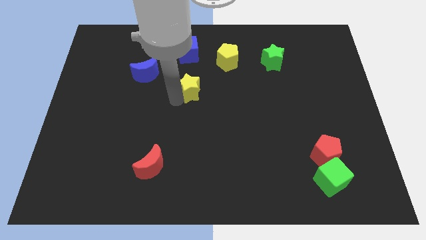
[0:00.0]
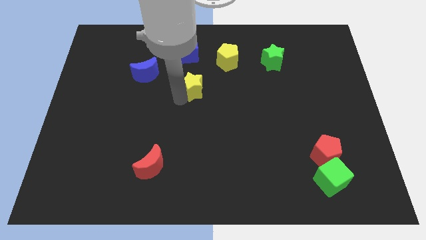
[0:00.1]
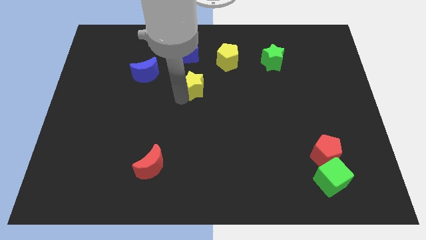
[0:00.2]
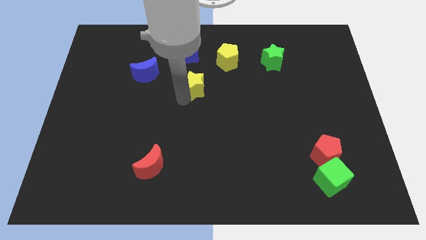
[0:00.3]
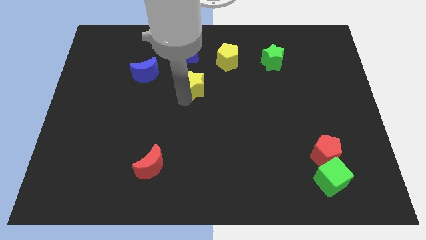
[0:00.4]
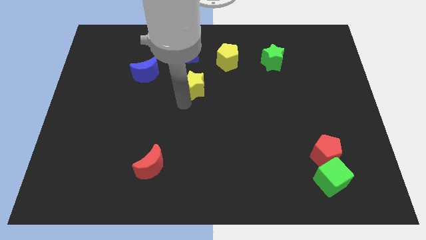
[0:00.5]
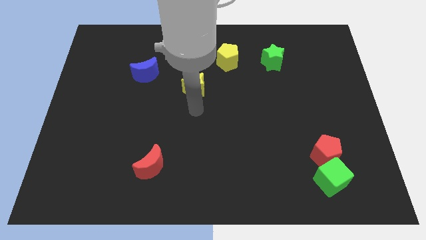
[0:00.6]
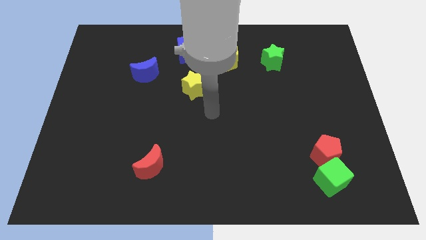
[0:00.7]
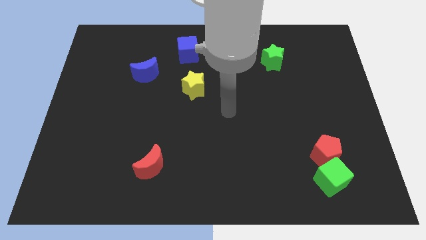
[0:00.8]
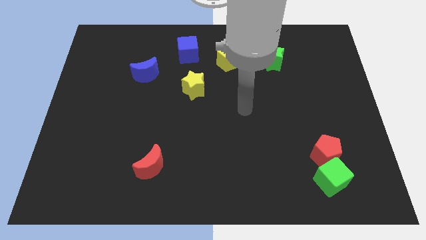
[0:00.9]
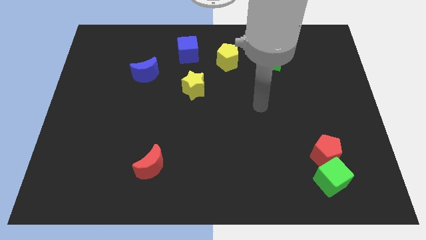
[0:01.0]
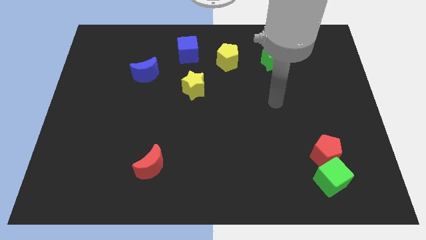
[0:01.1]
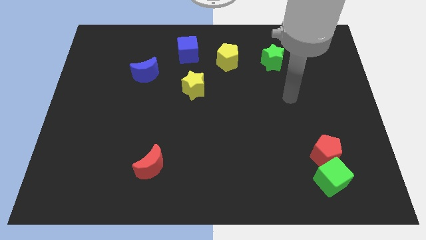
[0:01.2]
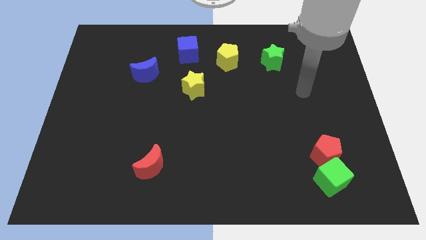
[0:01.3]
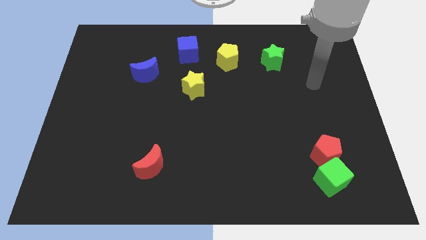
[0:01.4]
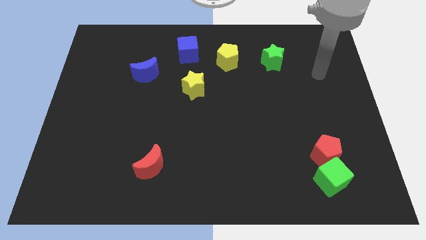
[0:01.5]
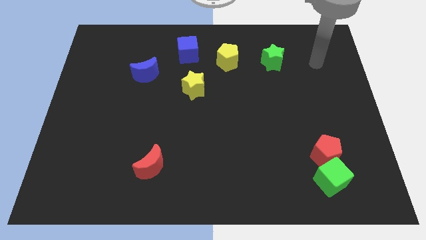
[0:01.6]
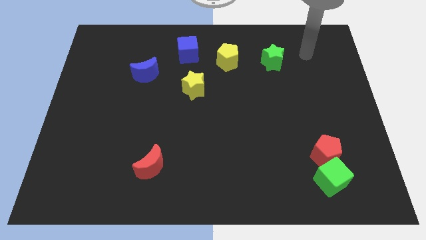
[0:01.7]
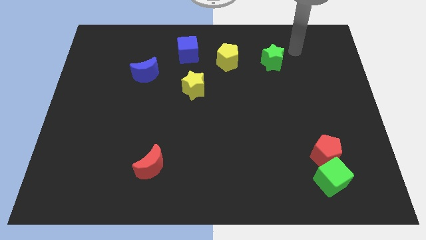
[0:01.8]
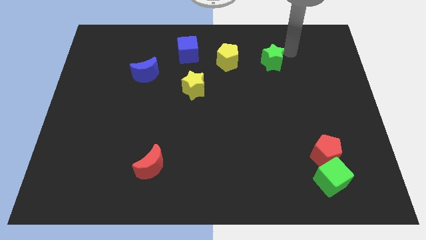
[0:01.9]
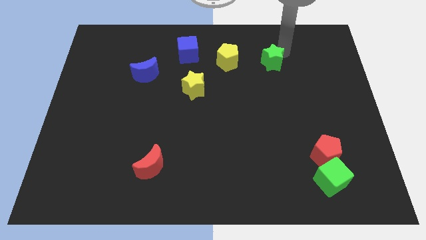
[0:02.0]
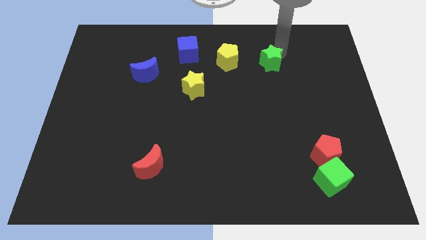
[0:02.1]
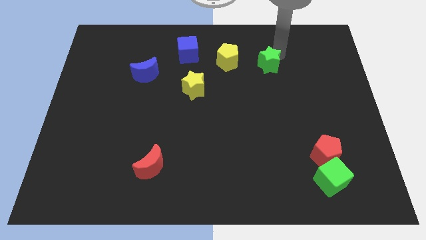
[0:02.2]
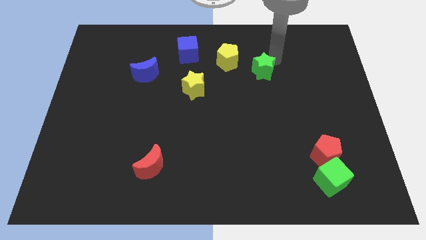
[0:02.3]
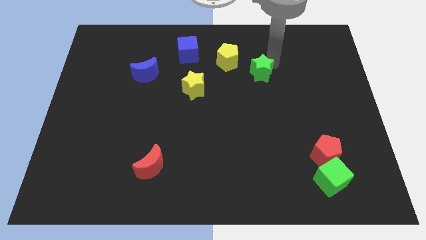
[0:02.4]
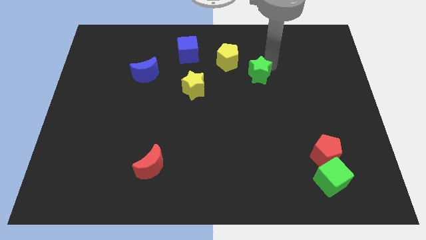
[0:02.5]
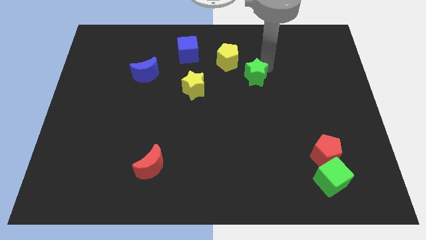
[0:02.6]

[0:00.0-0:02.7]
touch the green star with your arm

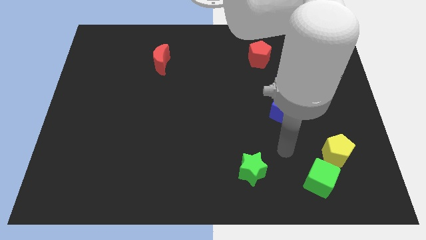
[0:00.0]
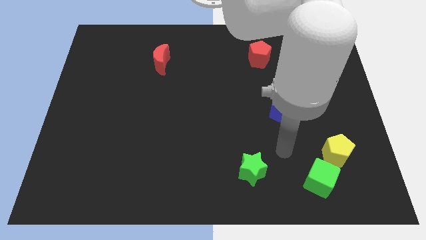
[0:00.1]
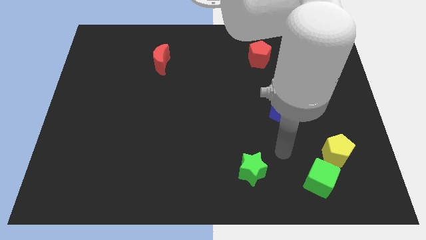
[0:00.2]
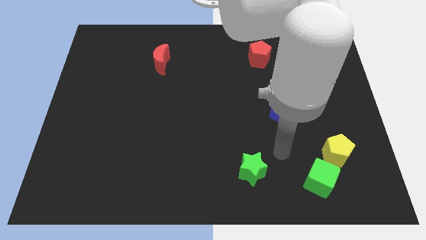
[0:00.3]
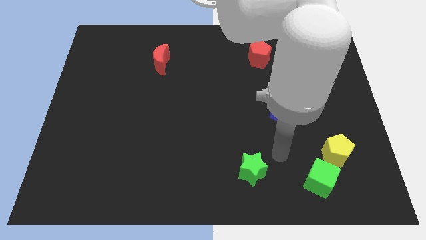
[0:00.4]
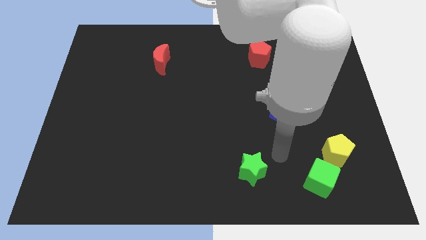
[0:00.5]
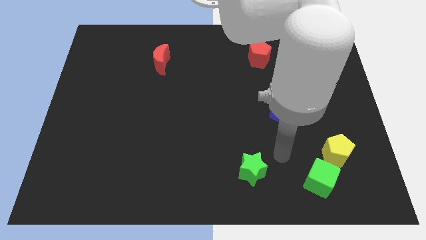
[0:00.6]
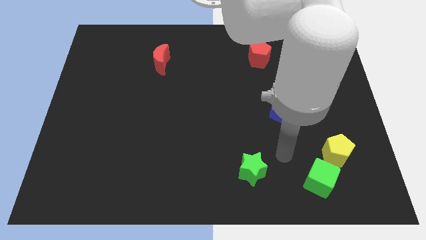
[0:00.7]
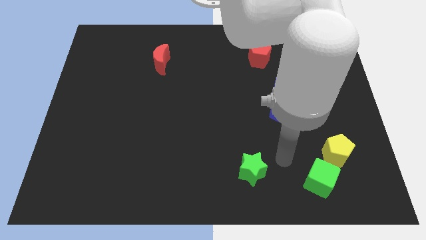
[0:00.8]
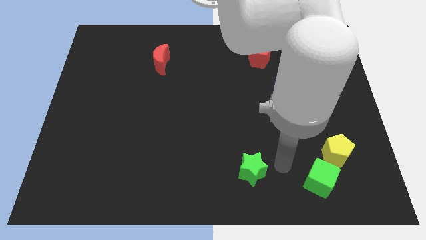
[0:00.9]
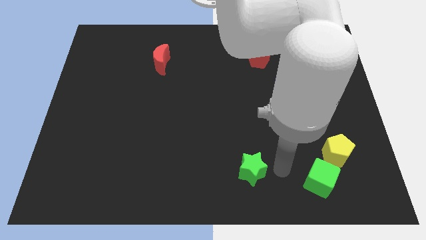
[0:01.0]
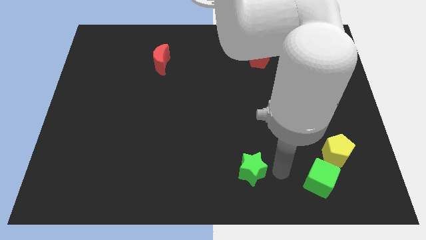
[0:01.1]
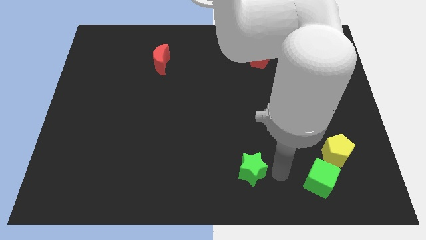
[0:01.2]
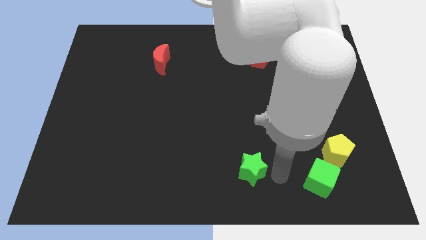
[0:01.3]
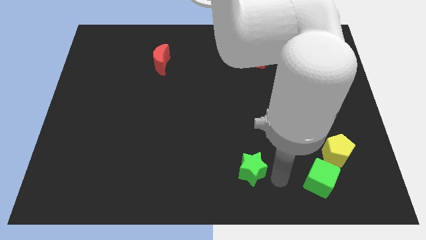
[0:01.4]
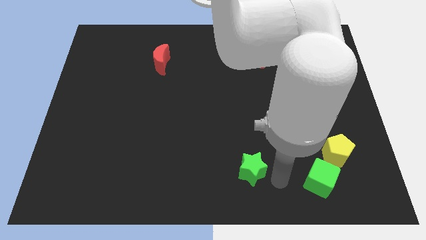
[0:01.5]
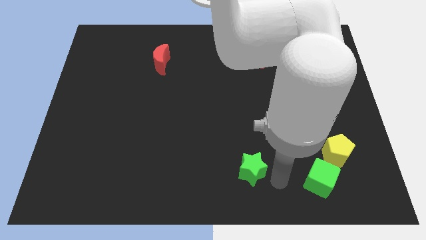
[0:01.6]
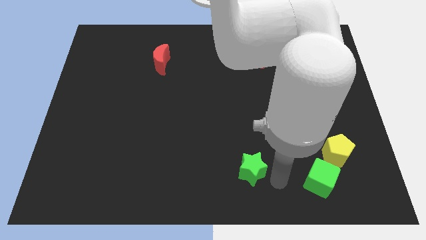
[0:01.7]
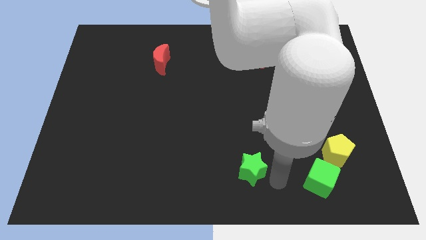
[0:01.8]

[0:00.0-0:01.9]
put your hand parallel right to the green star

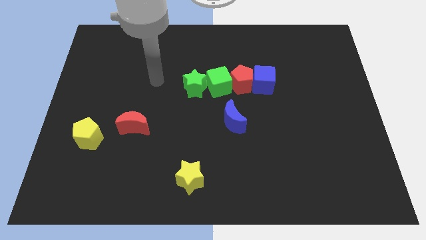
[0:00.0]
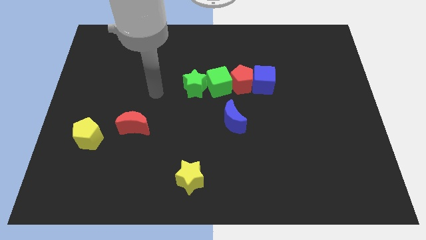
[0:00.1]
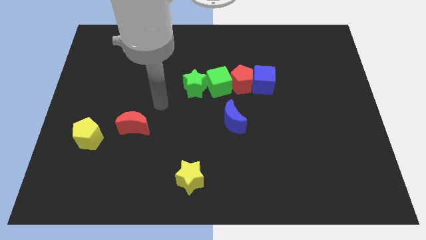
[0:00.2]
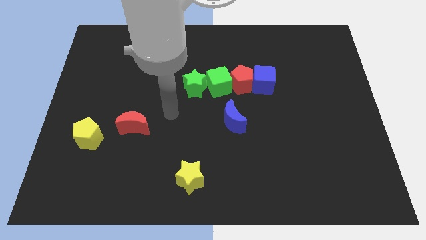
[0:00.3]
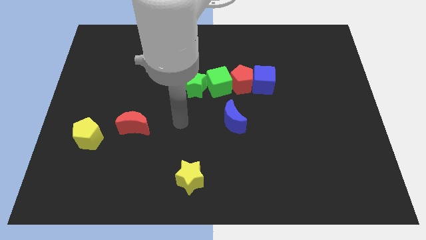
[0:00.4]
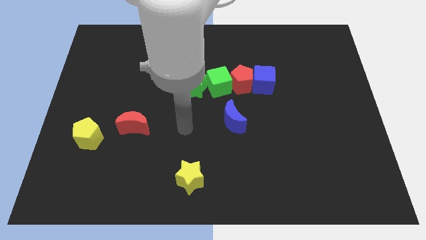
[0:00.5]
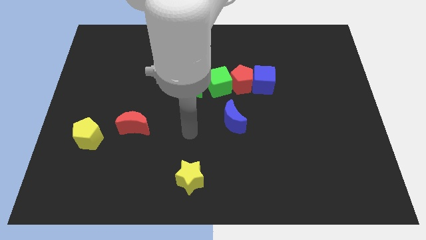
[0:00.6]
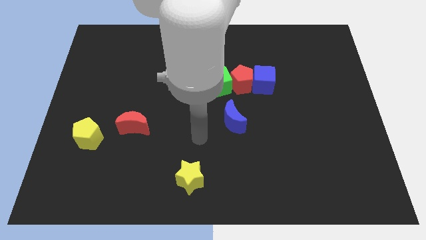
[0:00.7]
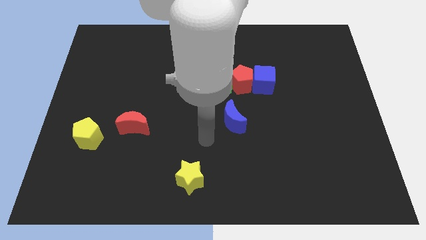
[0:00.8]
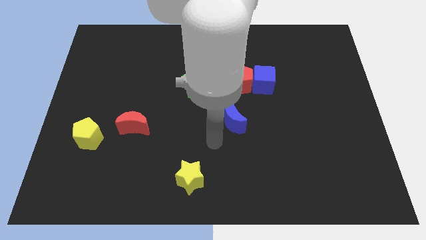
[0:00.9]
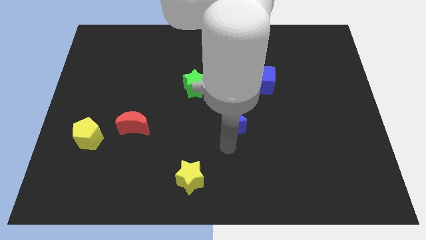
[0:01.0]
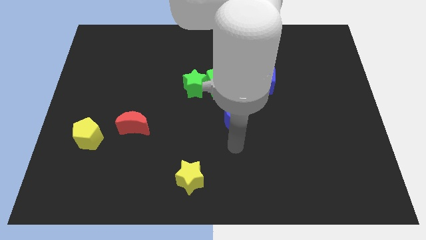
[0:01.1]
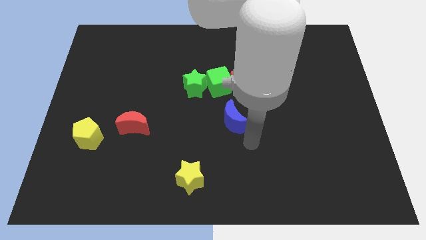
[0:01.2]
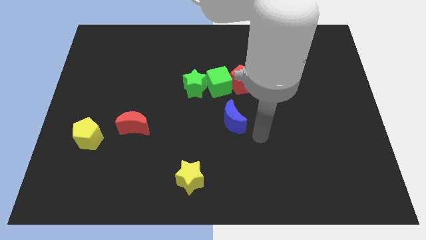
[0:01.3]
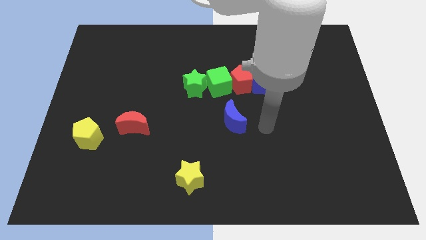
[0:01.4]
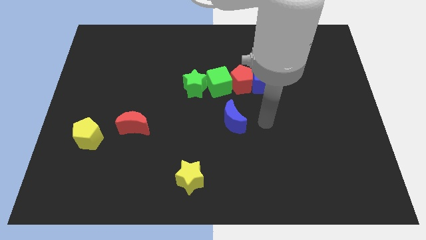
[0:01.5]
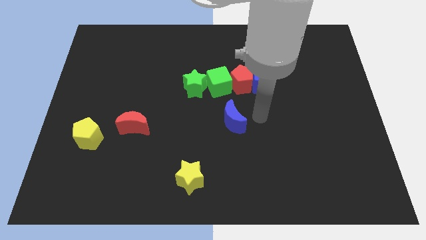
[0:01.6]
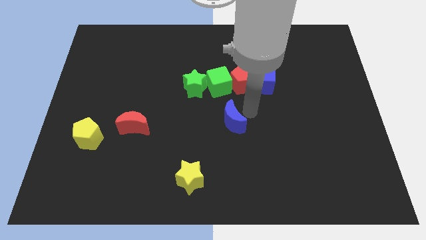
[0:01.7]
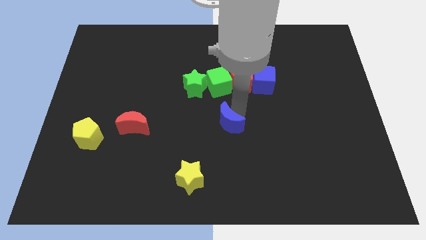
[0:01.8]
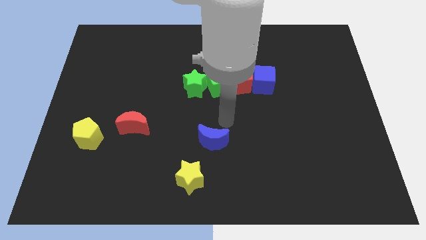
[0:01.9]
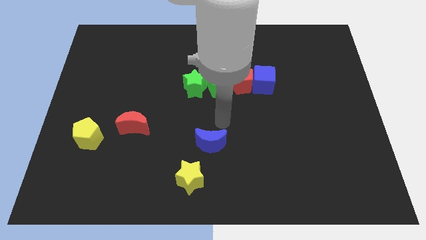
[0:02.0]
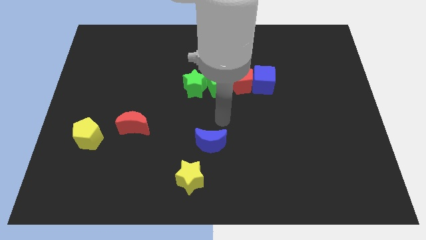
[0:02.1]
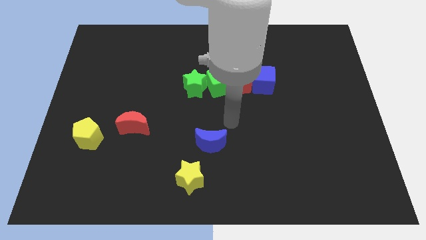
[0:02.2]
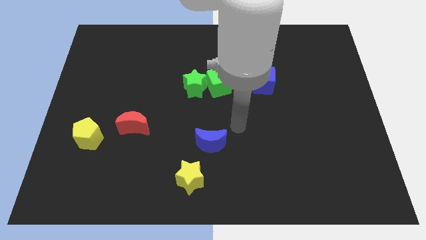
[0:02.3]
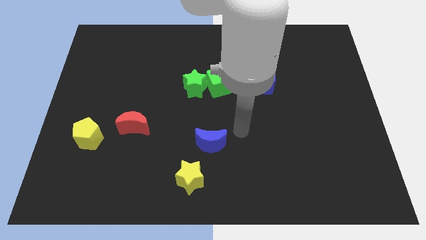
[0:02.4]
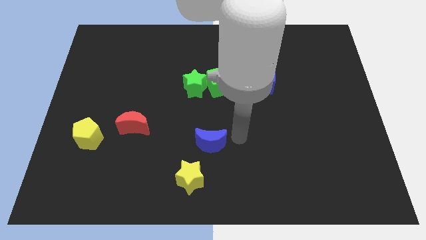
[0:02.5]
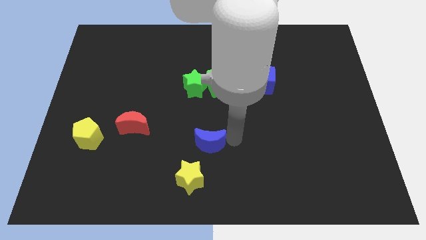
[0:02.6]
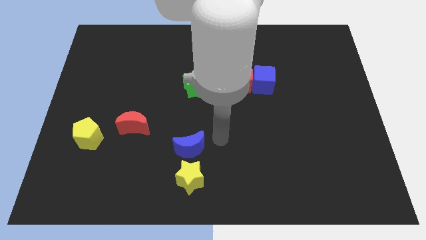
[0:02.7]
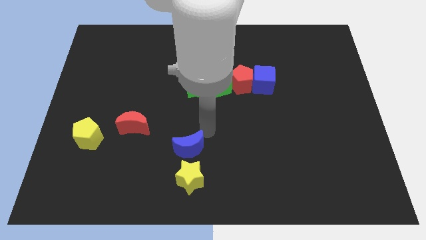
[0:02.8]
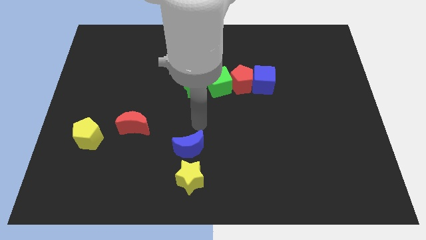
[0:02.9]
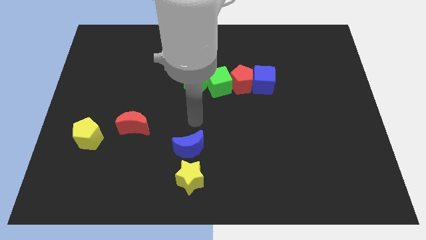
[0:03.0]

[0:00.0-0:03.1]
move blue moon on top of yellow star

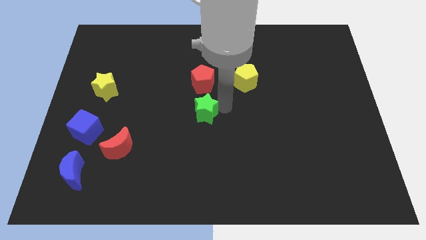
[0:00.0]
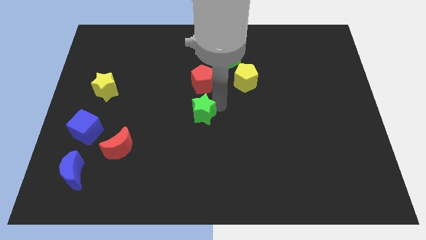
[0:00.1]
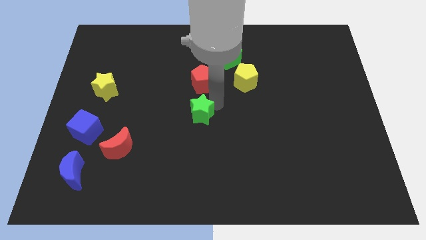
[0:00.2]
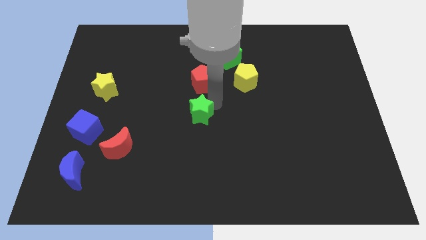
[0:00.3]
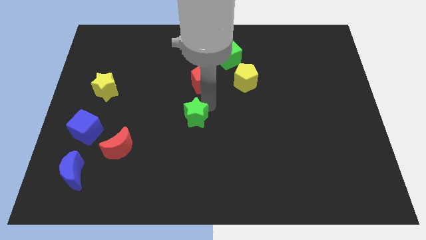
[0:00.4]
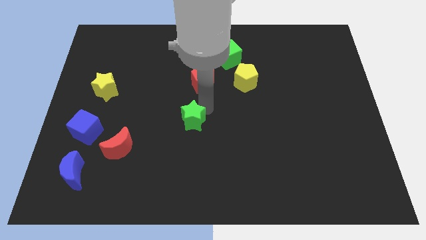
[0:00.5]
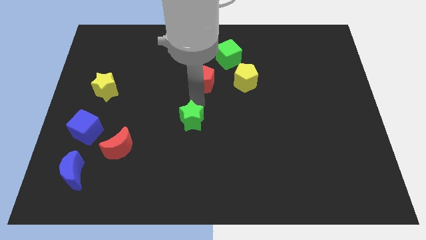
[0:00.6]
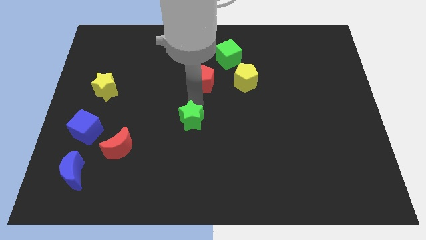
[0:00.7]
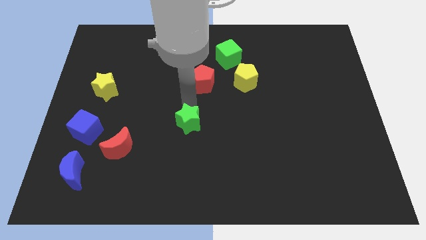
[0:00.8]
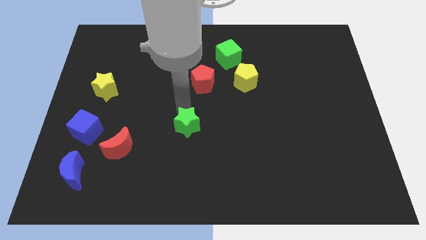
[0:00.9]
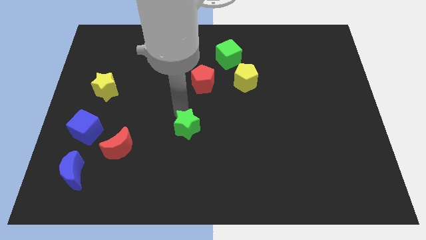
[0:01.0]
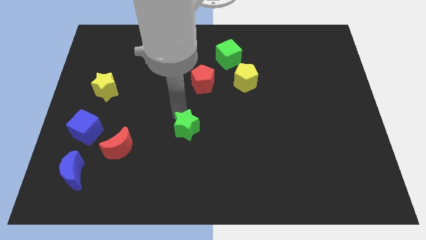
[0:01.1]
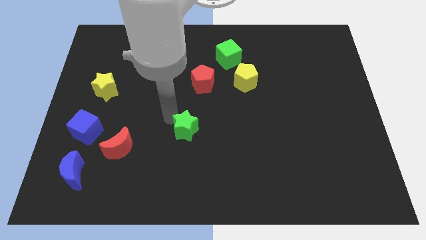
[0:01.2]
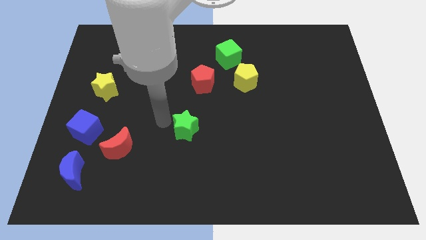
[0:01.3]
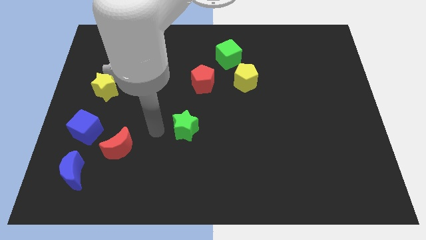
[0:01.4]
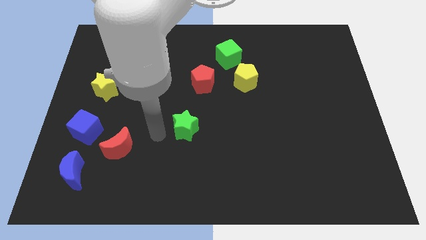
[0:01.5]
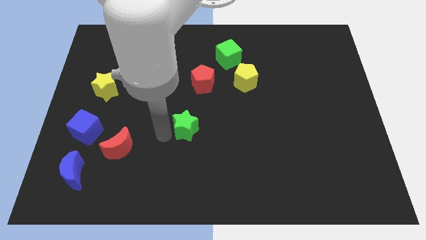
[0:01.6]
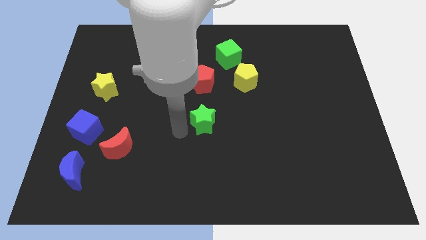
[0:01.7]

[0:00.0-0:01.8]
push the green star towards the bottom center of the board
